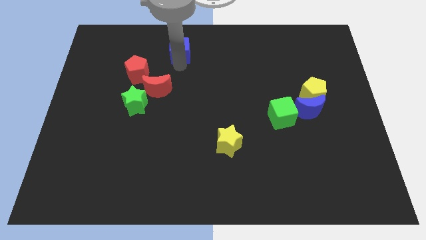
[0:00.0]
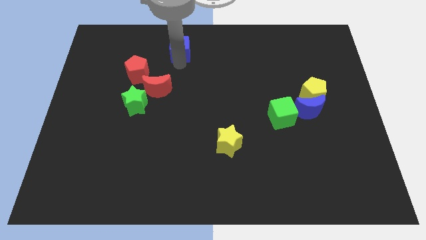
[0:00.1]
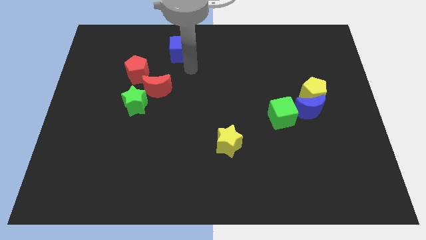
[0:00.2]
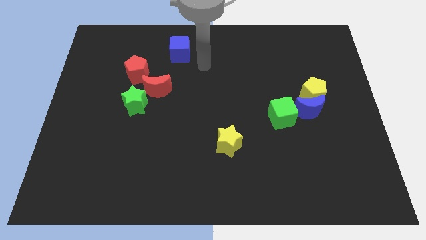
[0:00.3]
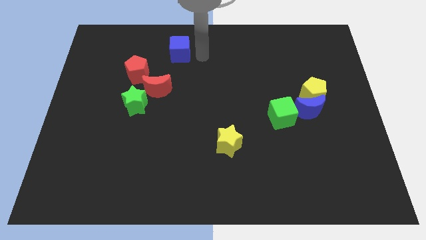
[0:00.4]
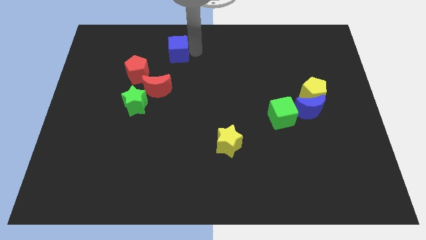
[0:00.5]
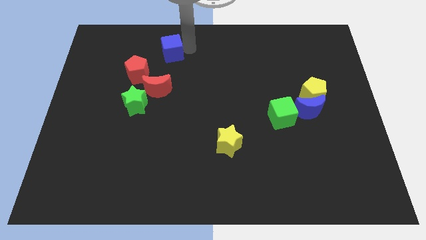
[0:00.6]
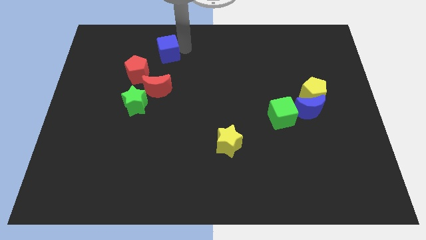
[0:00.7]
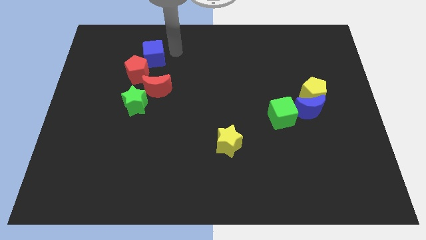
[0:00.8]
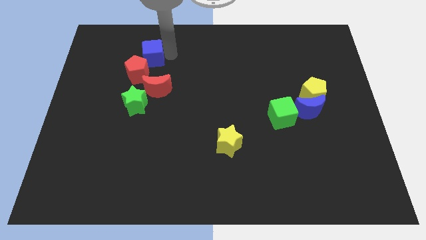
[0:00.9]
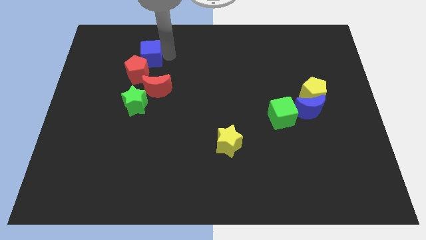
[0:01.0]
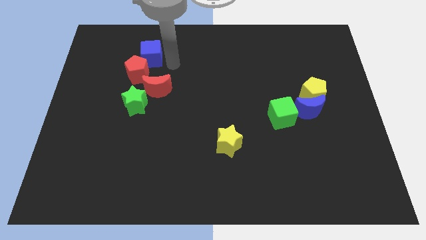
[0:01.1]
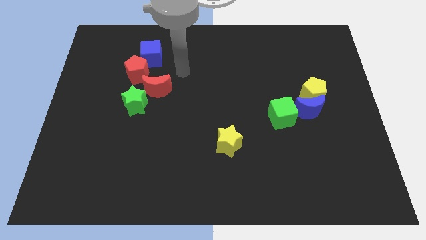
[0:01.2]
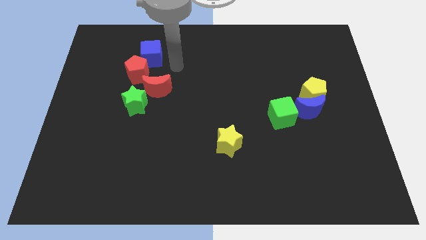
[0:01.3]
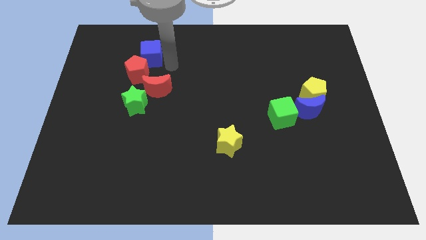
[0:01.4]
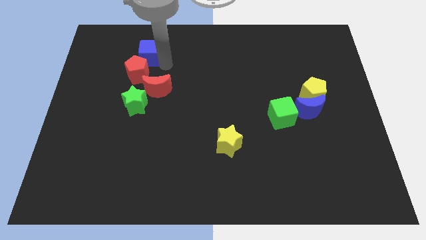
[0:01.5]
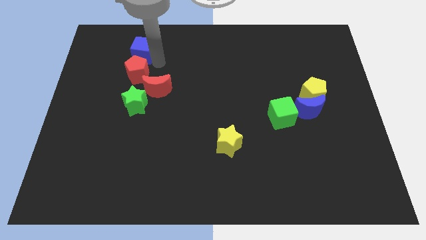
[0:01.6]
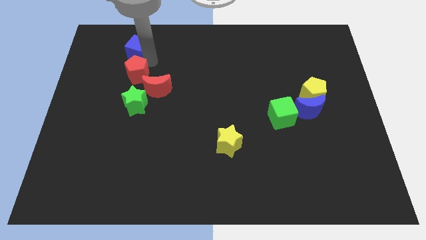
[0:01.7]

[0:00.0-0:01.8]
place the blue cube on top of red pentagon

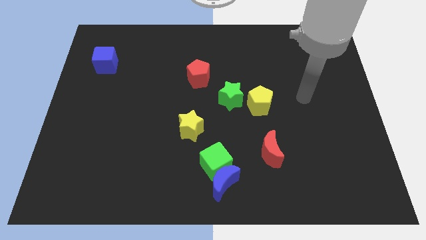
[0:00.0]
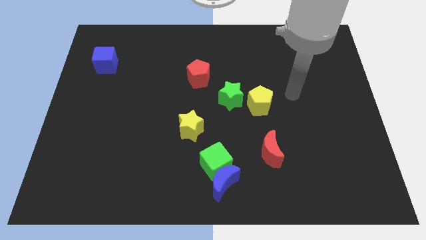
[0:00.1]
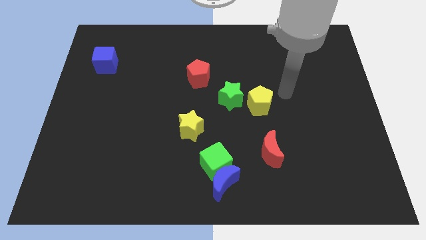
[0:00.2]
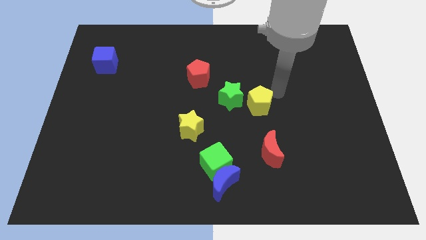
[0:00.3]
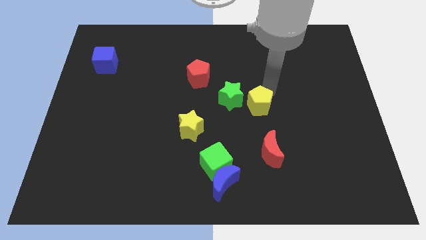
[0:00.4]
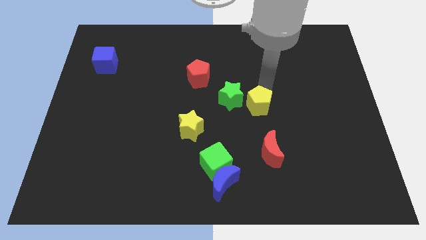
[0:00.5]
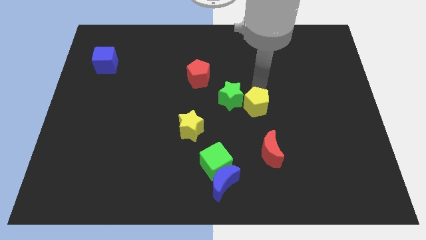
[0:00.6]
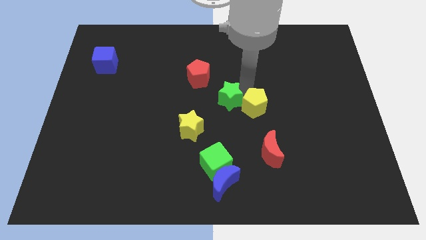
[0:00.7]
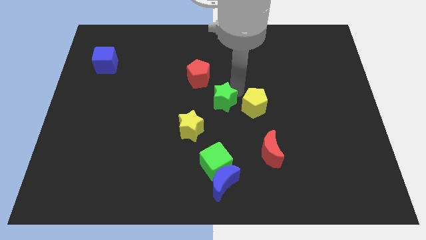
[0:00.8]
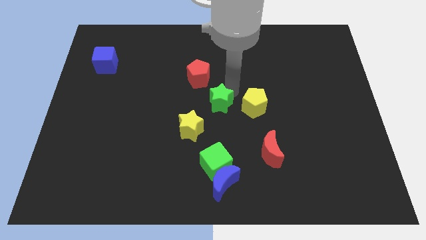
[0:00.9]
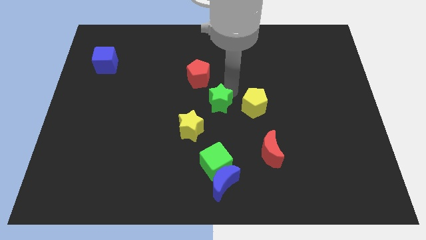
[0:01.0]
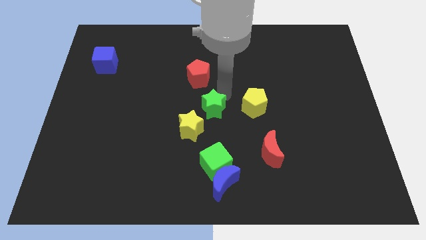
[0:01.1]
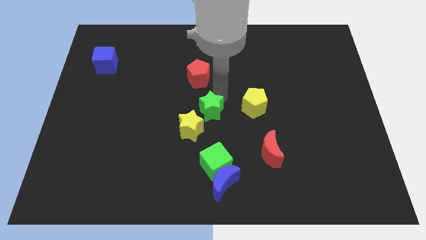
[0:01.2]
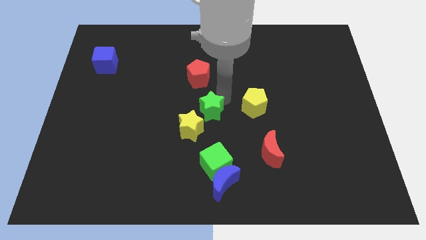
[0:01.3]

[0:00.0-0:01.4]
push the green star close to the yellow star

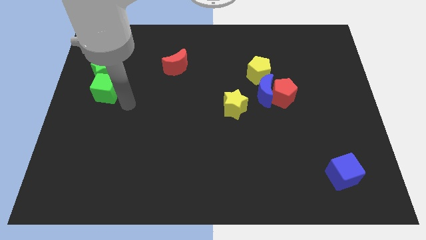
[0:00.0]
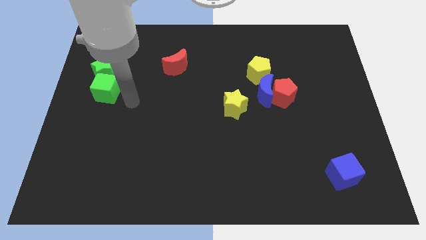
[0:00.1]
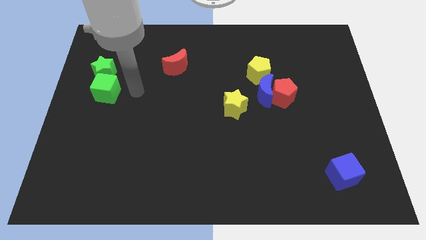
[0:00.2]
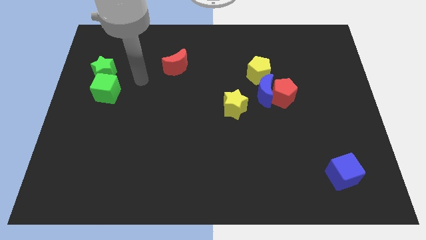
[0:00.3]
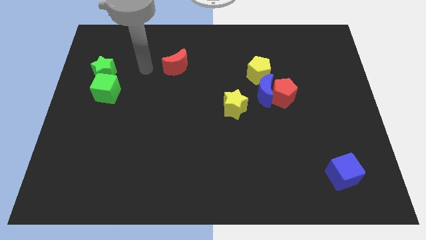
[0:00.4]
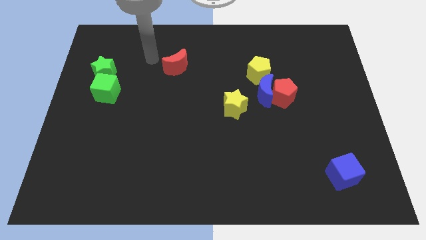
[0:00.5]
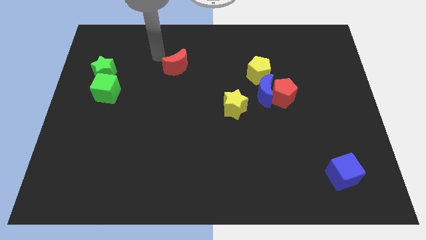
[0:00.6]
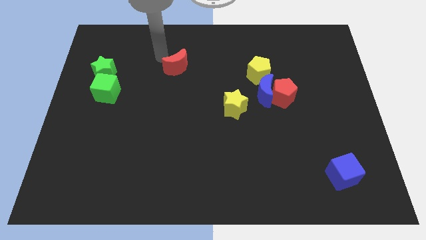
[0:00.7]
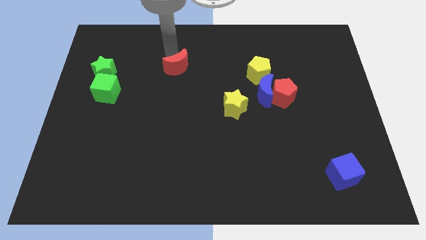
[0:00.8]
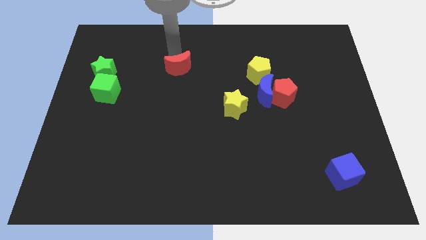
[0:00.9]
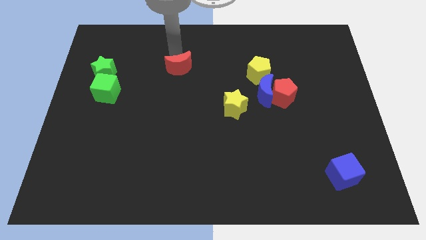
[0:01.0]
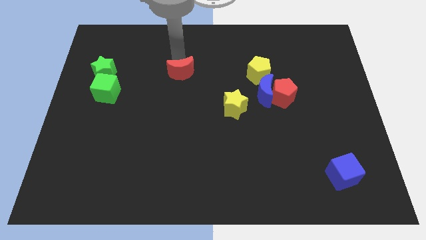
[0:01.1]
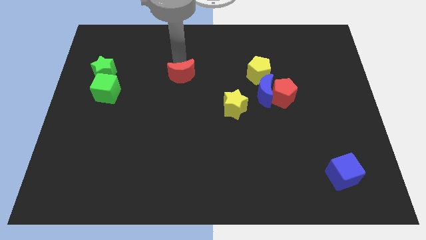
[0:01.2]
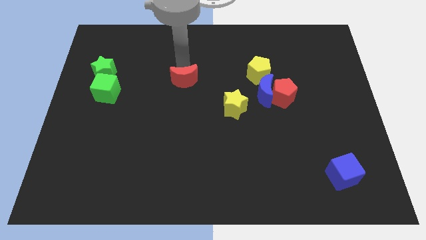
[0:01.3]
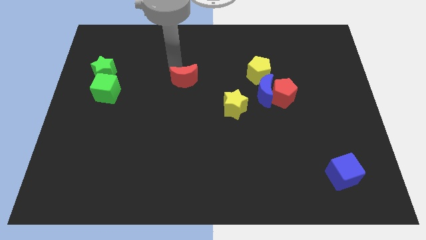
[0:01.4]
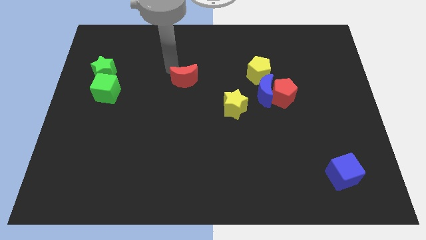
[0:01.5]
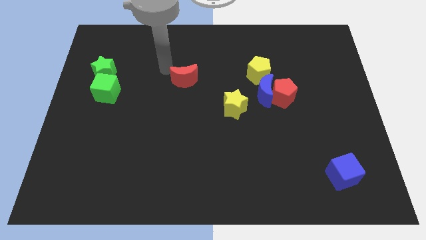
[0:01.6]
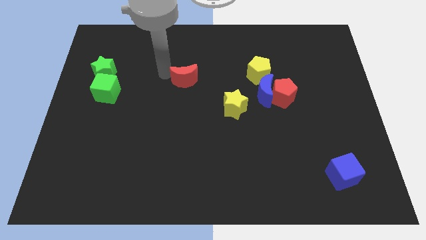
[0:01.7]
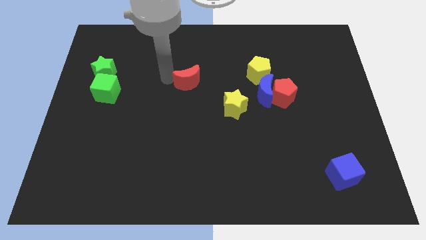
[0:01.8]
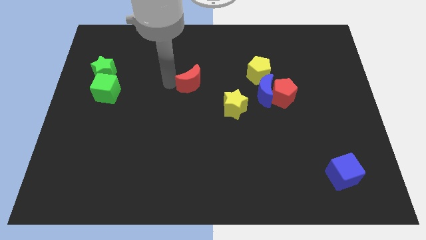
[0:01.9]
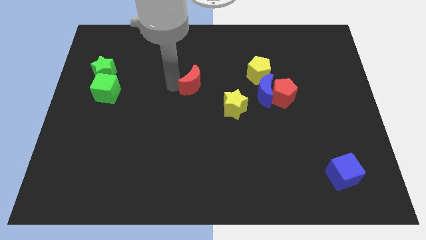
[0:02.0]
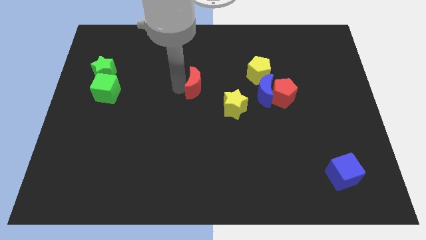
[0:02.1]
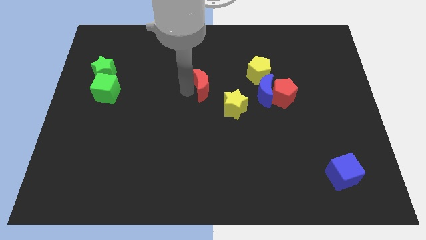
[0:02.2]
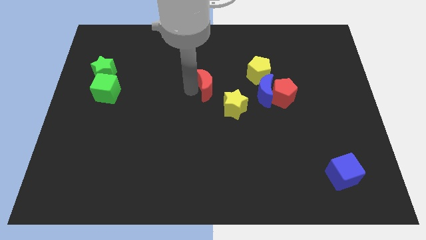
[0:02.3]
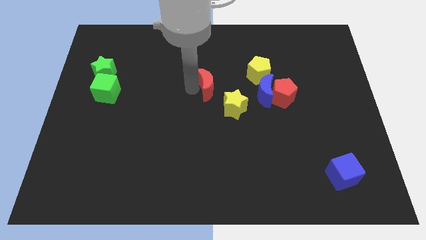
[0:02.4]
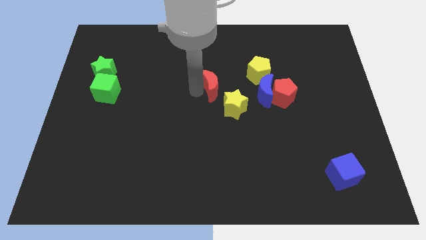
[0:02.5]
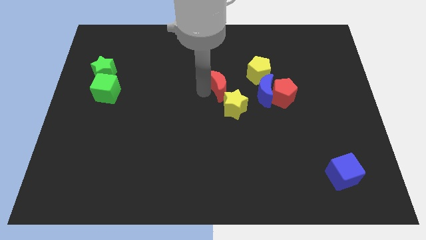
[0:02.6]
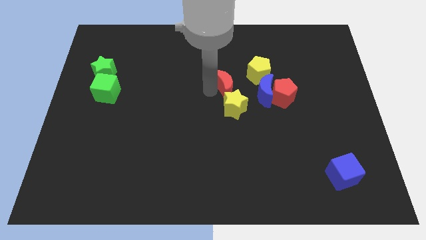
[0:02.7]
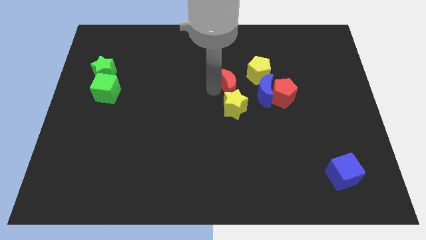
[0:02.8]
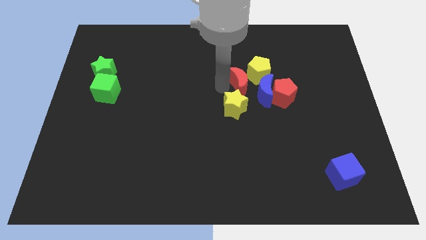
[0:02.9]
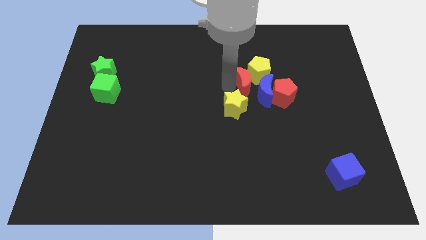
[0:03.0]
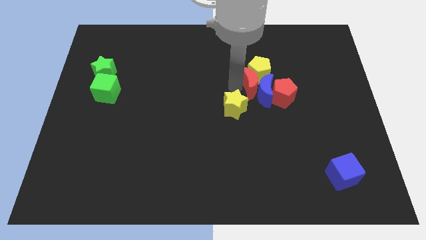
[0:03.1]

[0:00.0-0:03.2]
place the red moon in between the yellow pentagon and yellow star

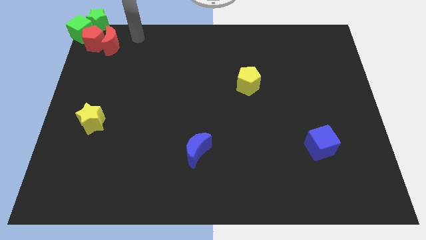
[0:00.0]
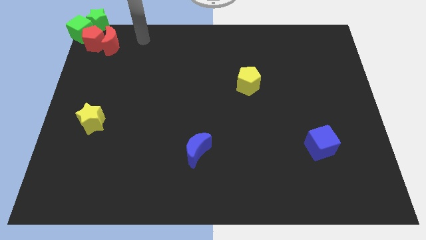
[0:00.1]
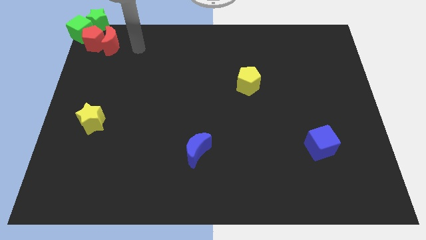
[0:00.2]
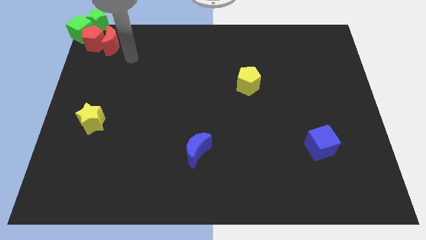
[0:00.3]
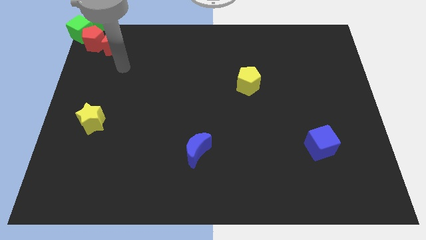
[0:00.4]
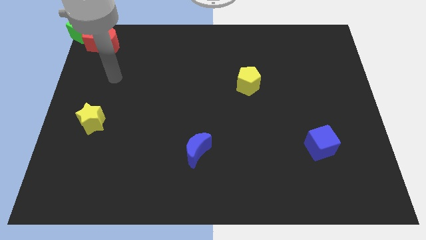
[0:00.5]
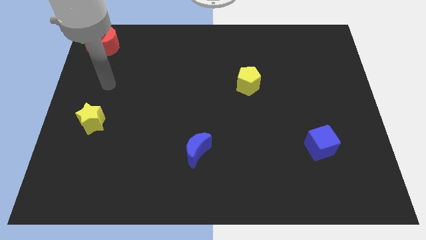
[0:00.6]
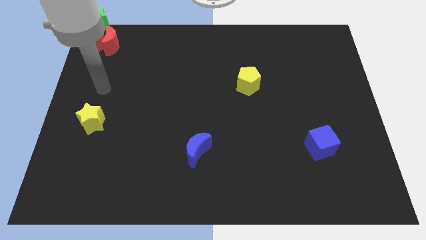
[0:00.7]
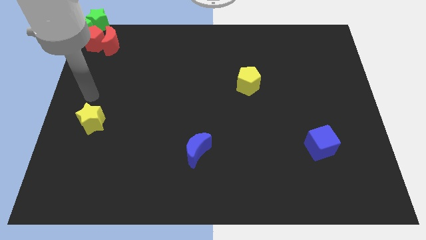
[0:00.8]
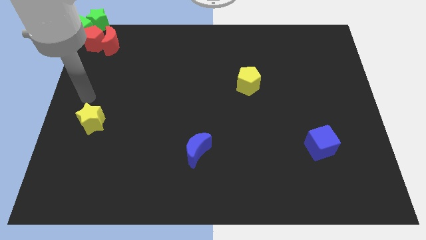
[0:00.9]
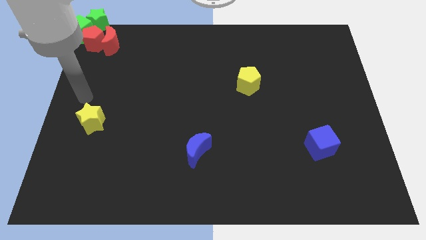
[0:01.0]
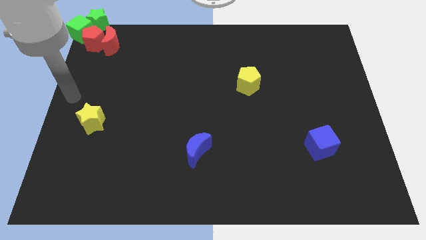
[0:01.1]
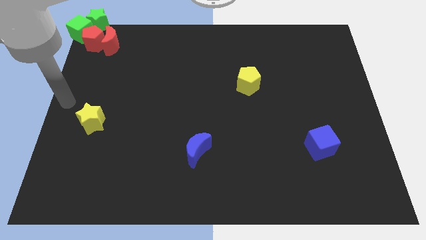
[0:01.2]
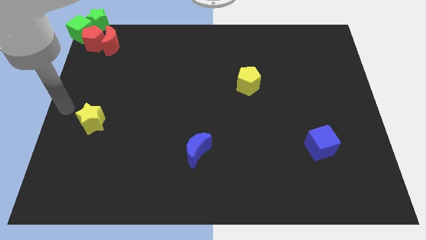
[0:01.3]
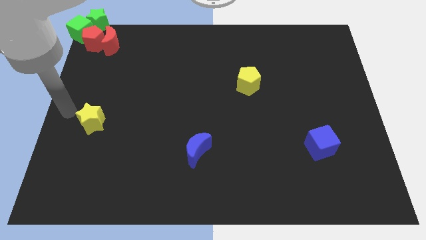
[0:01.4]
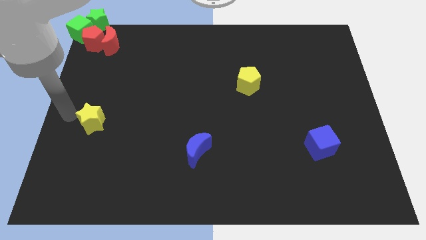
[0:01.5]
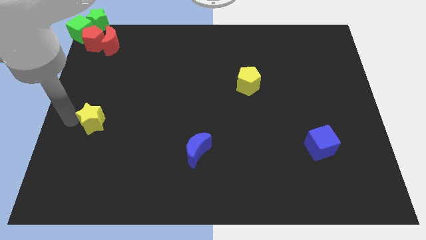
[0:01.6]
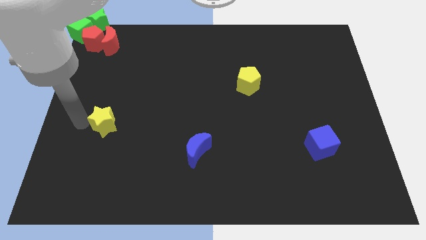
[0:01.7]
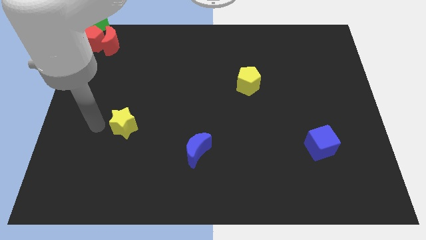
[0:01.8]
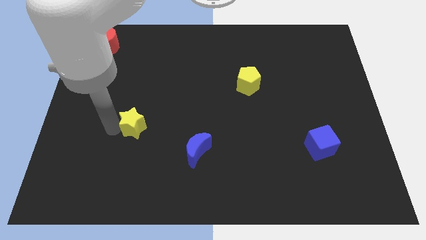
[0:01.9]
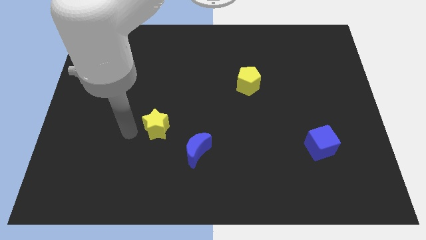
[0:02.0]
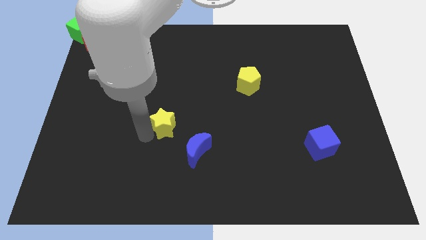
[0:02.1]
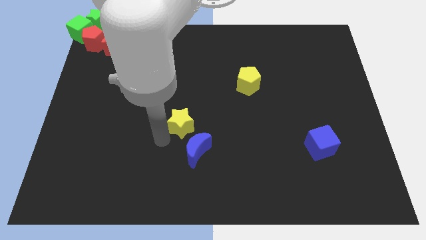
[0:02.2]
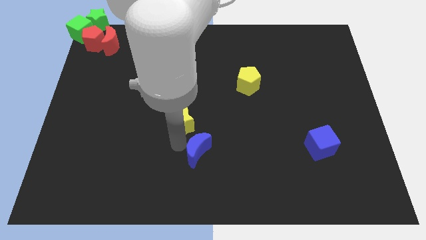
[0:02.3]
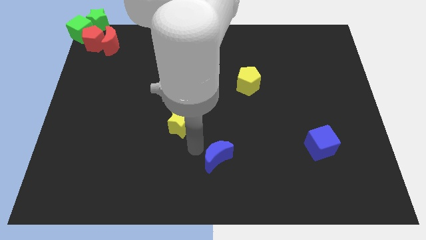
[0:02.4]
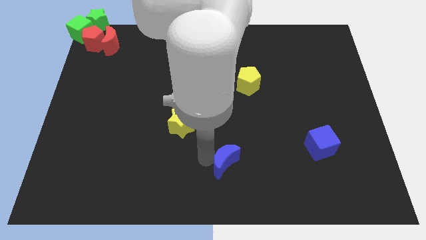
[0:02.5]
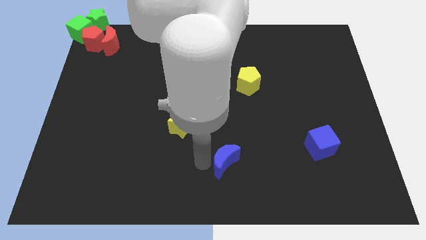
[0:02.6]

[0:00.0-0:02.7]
move the yellow star towards the center of the board
